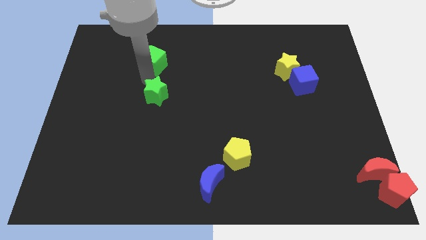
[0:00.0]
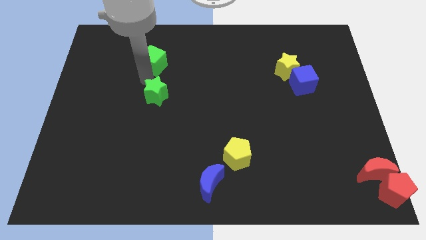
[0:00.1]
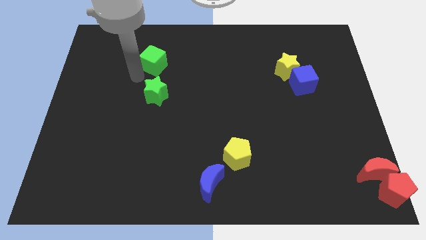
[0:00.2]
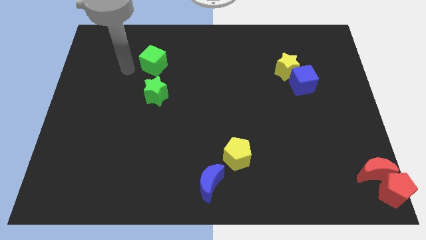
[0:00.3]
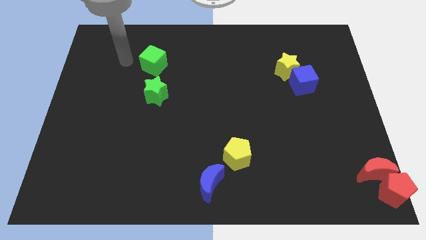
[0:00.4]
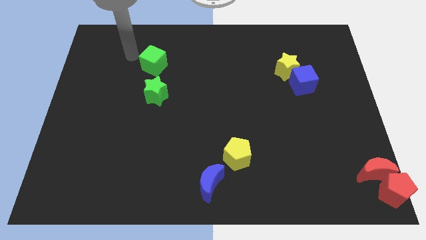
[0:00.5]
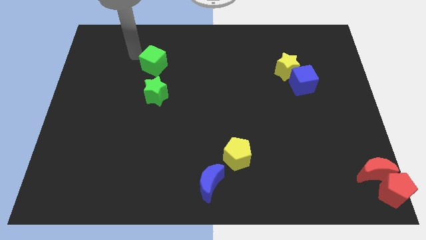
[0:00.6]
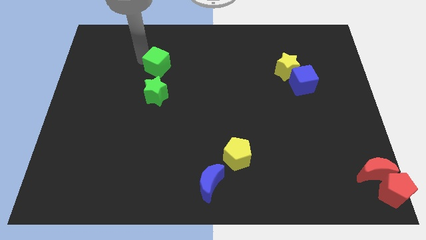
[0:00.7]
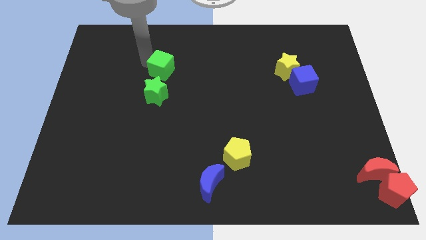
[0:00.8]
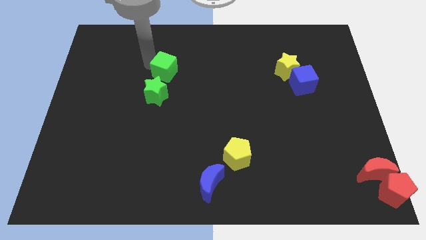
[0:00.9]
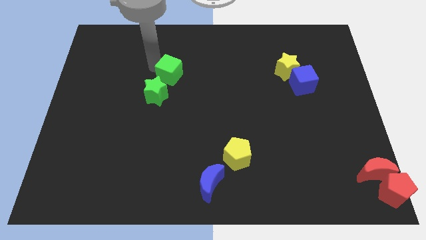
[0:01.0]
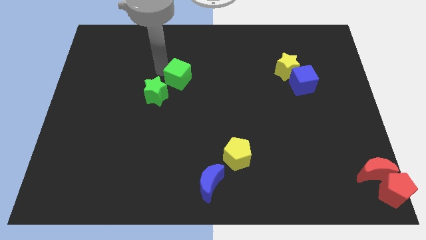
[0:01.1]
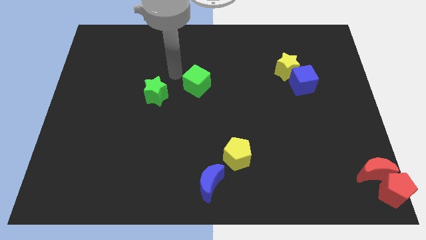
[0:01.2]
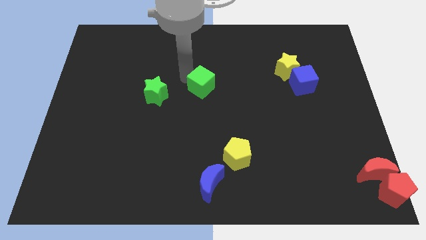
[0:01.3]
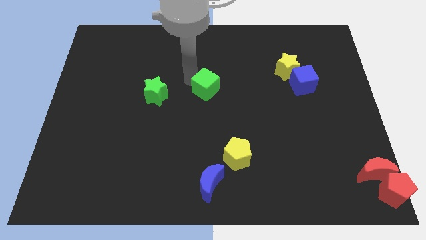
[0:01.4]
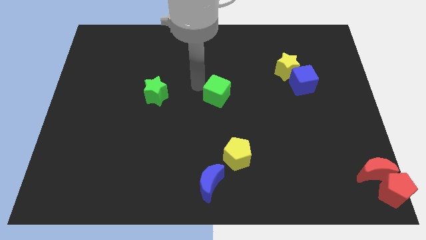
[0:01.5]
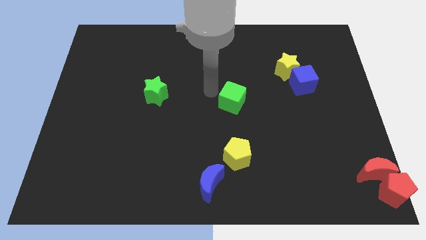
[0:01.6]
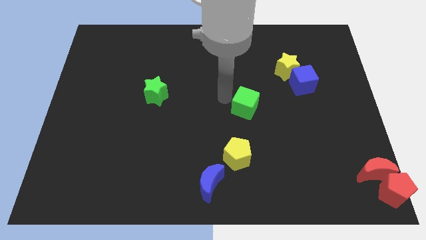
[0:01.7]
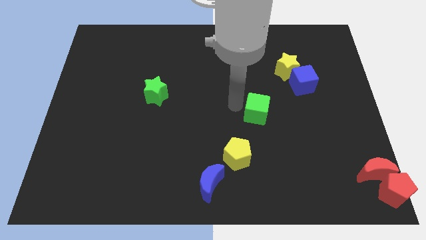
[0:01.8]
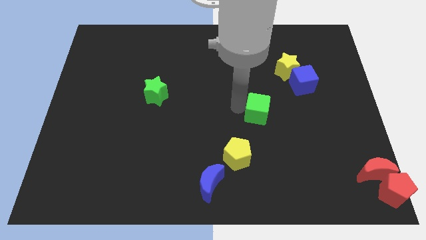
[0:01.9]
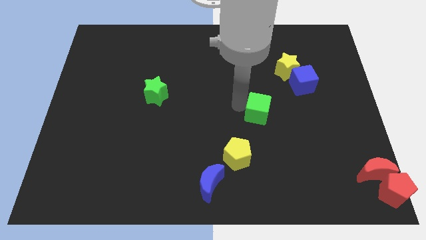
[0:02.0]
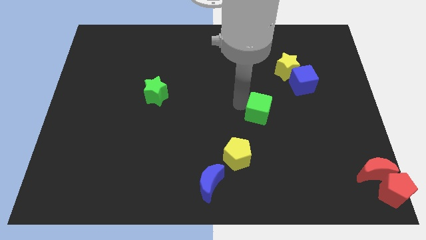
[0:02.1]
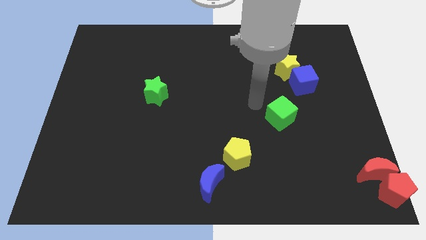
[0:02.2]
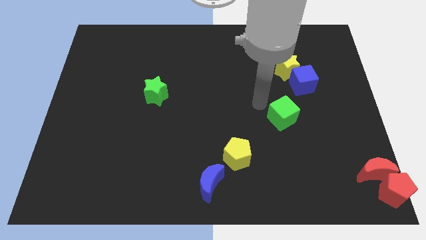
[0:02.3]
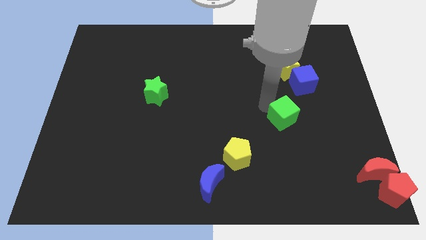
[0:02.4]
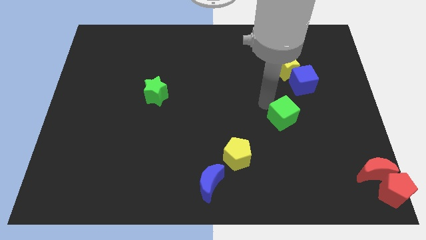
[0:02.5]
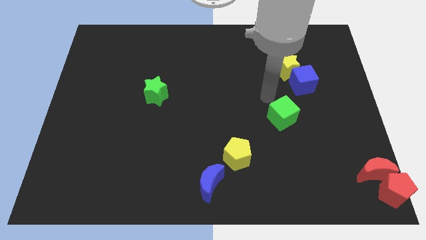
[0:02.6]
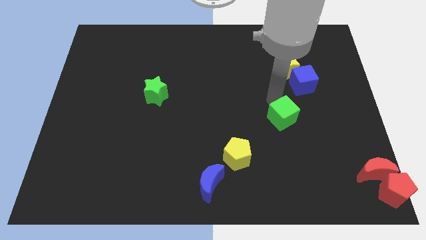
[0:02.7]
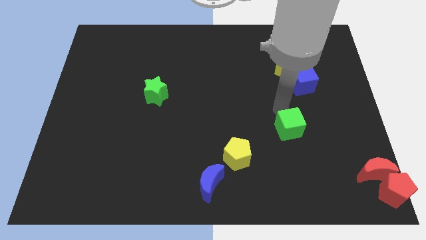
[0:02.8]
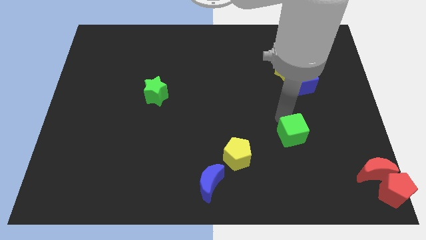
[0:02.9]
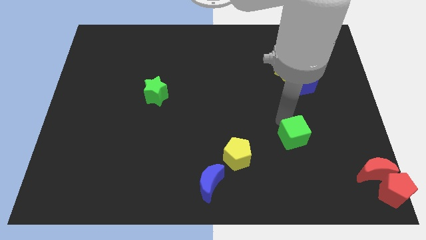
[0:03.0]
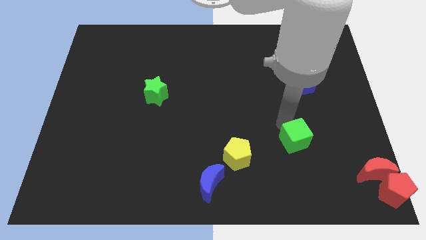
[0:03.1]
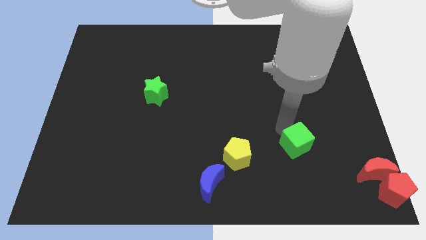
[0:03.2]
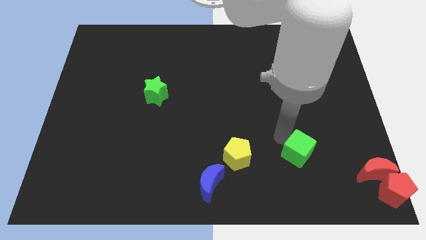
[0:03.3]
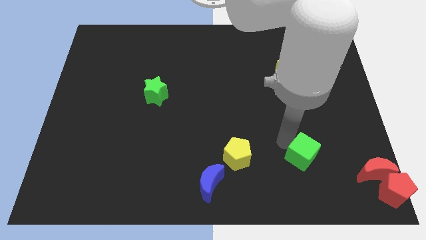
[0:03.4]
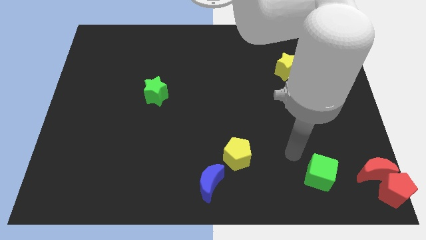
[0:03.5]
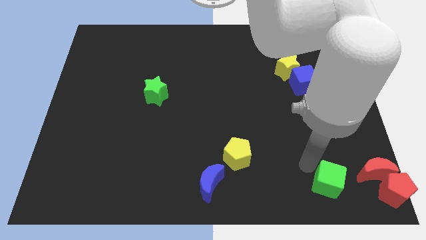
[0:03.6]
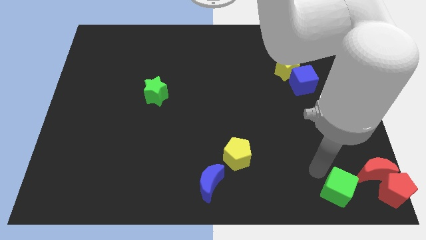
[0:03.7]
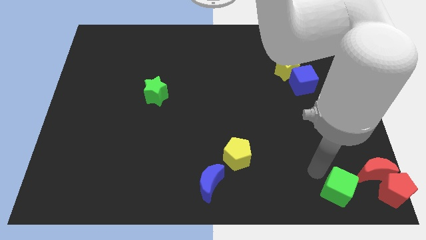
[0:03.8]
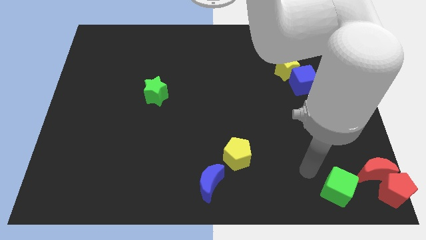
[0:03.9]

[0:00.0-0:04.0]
place the green cube to the left side of the red blocks

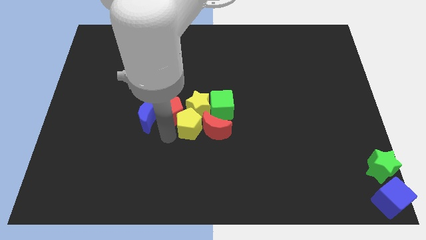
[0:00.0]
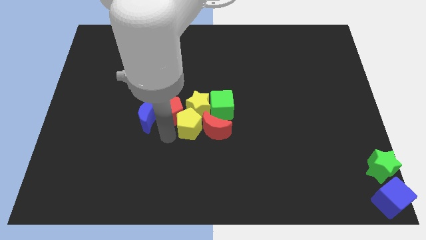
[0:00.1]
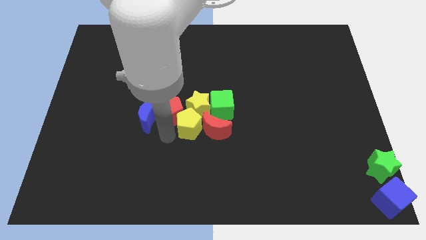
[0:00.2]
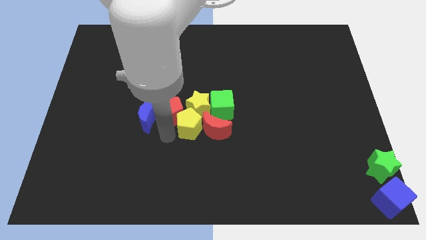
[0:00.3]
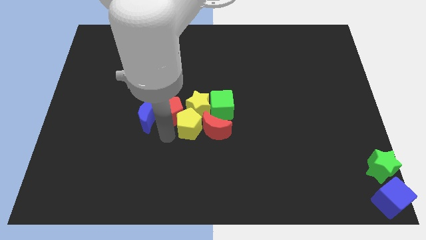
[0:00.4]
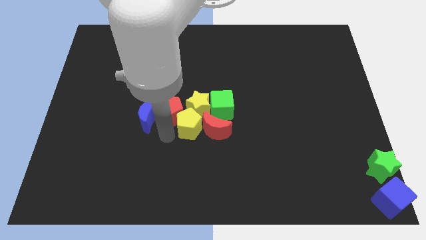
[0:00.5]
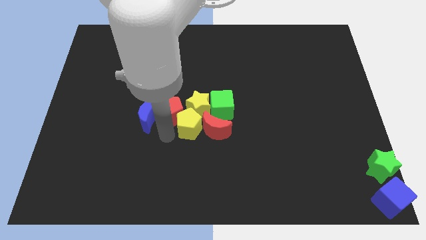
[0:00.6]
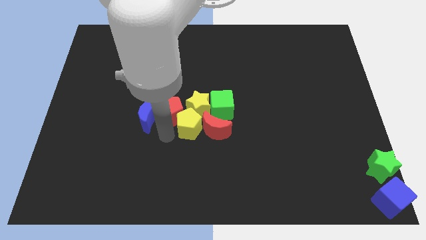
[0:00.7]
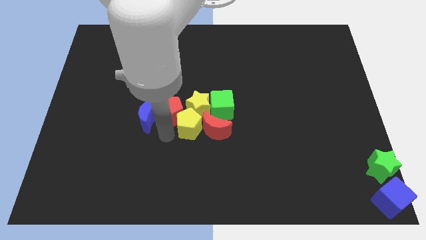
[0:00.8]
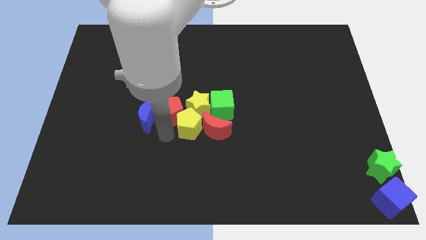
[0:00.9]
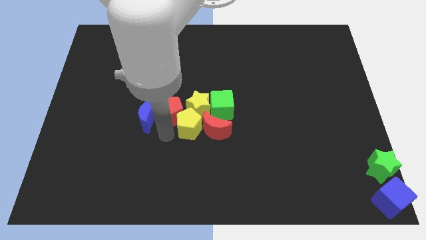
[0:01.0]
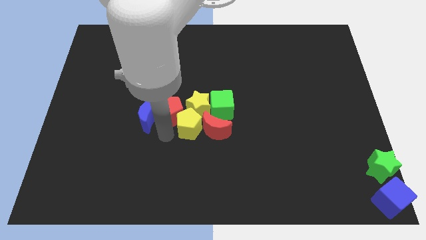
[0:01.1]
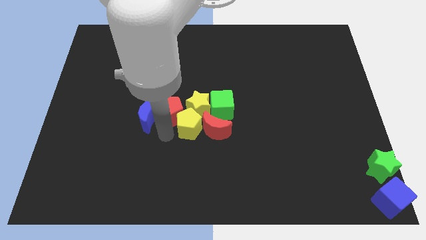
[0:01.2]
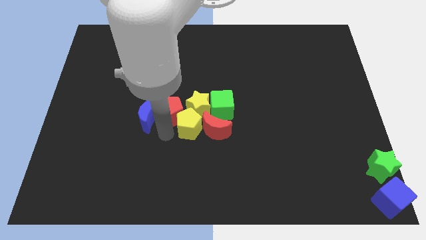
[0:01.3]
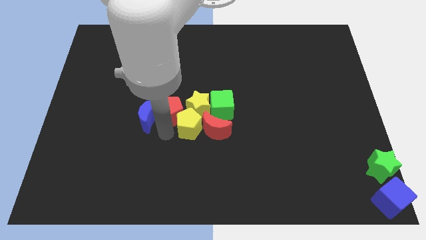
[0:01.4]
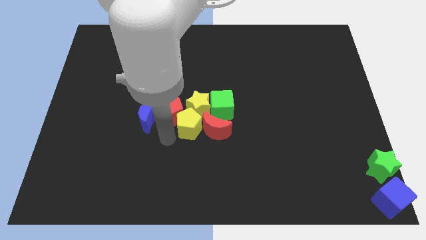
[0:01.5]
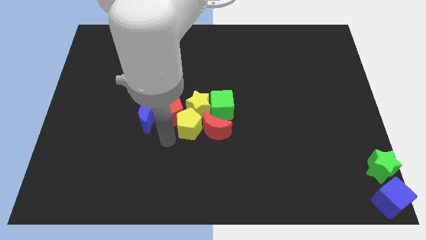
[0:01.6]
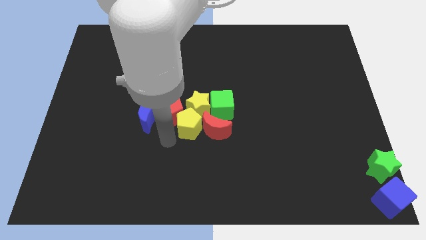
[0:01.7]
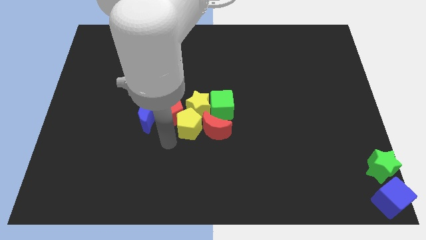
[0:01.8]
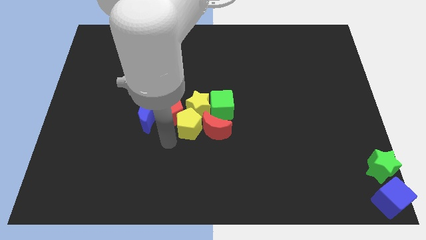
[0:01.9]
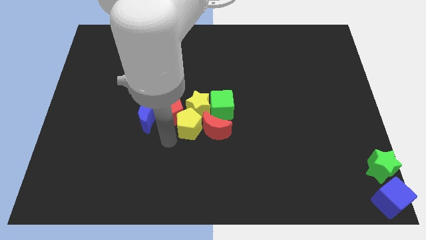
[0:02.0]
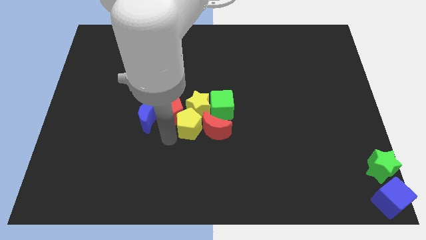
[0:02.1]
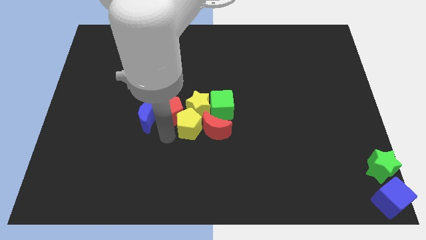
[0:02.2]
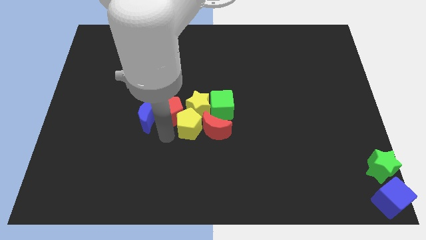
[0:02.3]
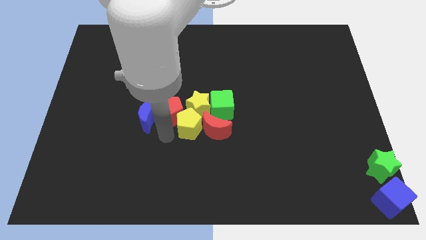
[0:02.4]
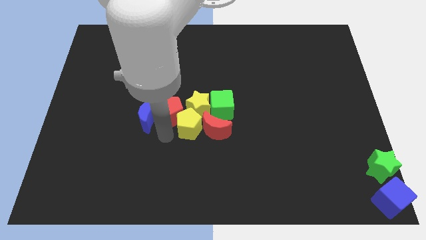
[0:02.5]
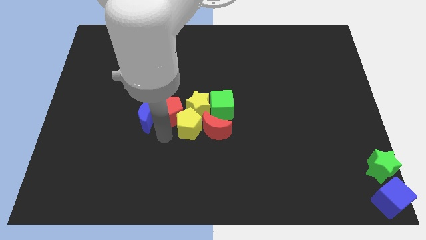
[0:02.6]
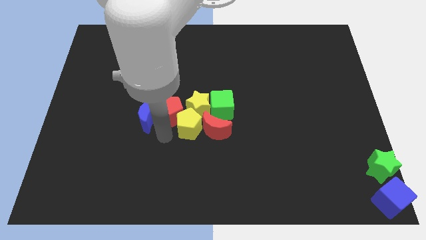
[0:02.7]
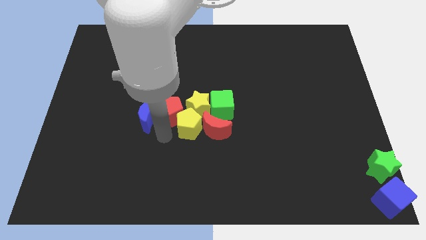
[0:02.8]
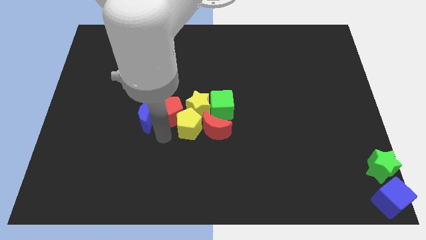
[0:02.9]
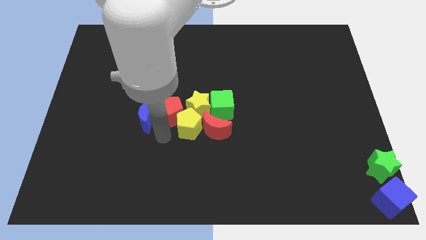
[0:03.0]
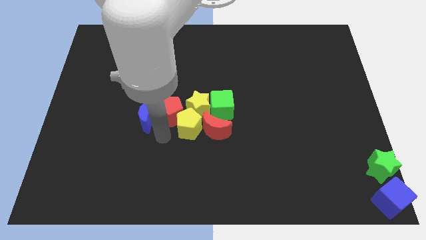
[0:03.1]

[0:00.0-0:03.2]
adjust your arm at the bottom side of the red pentagon

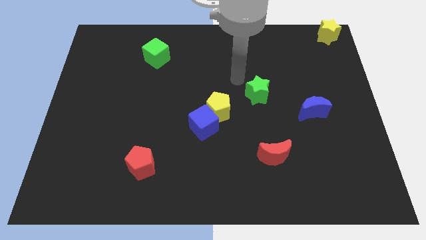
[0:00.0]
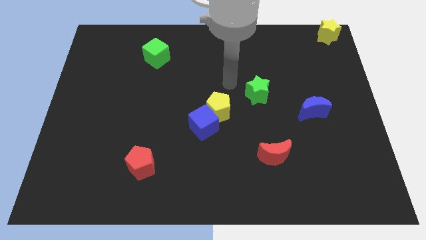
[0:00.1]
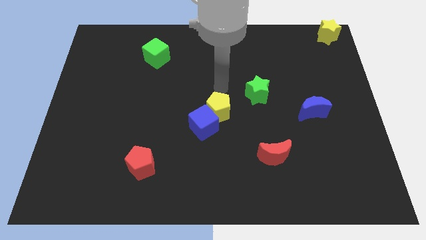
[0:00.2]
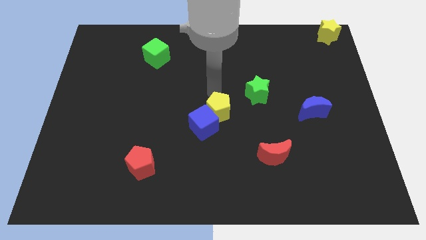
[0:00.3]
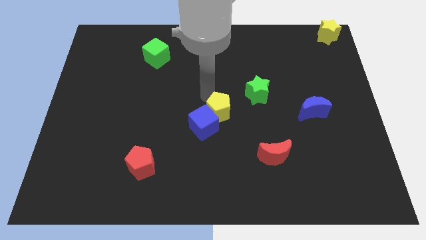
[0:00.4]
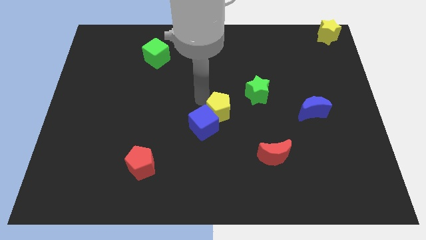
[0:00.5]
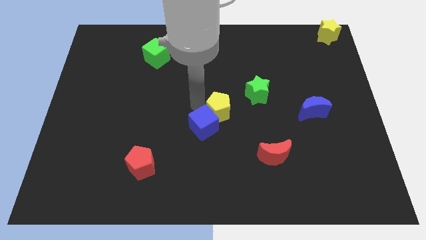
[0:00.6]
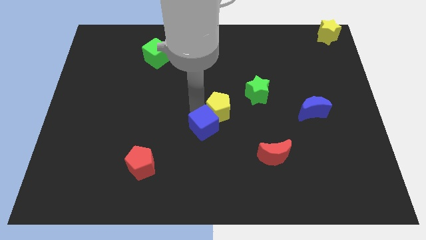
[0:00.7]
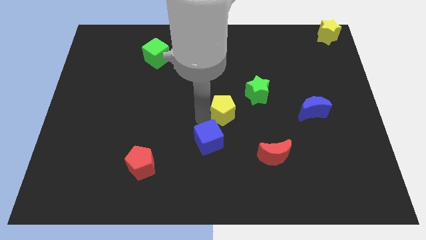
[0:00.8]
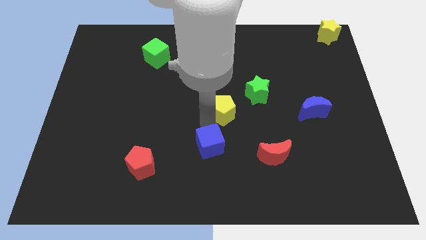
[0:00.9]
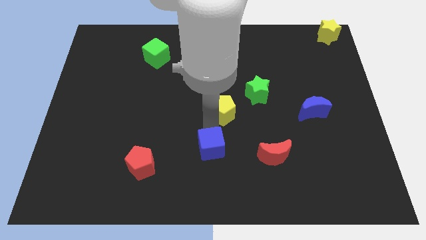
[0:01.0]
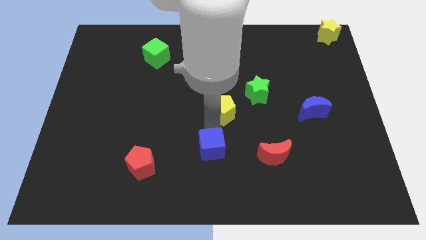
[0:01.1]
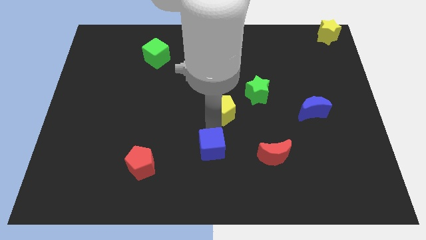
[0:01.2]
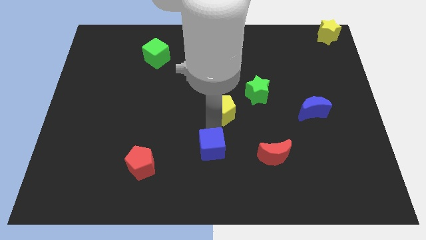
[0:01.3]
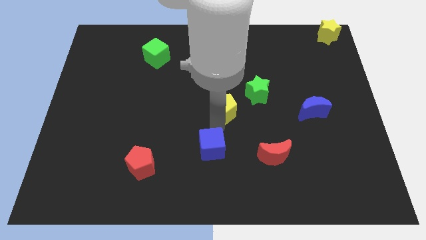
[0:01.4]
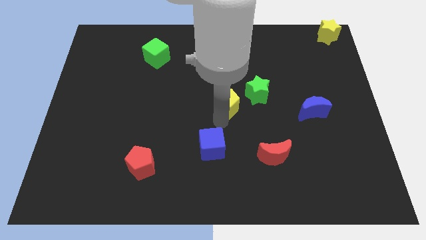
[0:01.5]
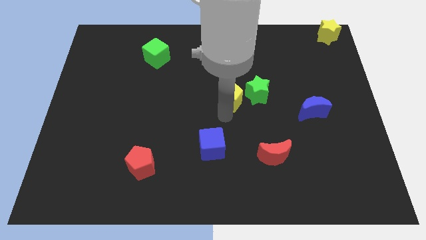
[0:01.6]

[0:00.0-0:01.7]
separate the blue cube from yellow pentagon
